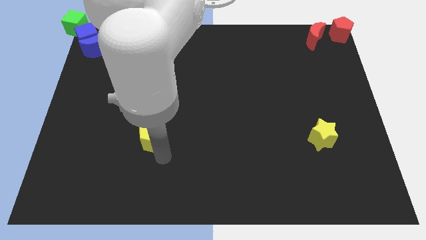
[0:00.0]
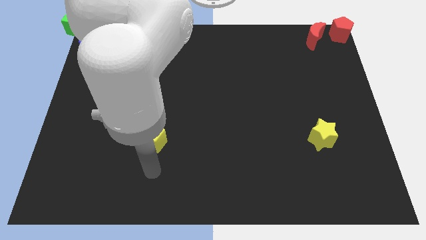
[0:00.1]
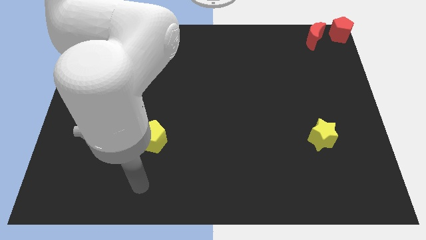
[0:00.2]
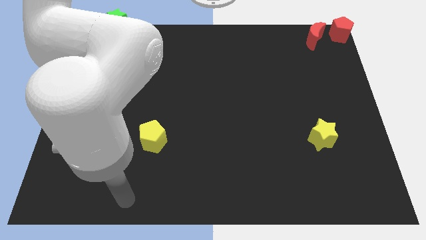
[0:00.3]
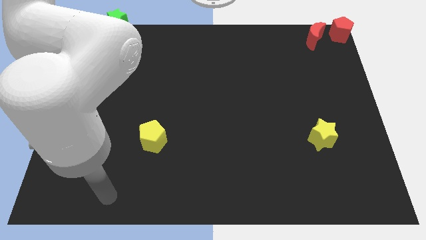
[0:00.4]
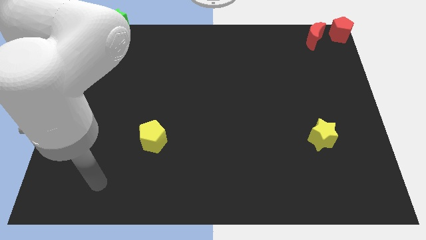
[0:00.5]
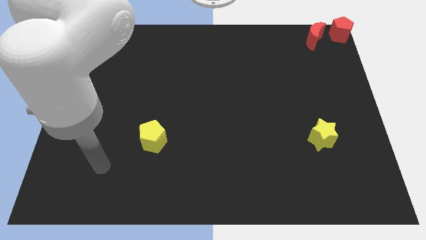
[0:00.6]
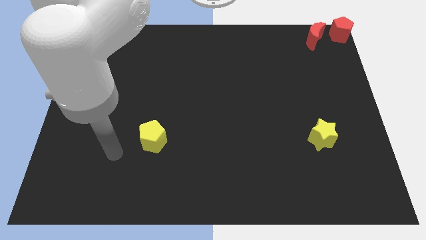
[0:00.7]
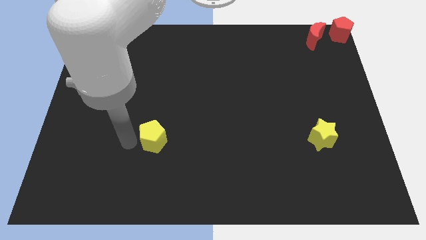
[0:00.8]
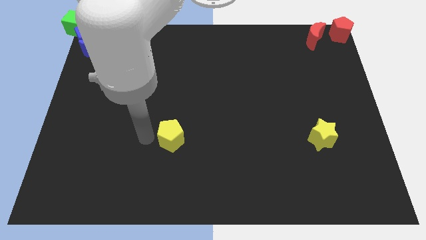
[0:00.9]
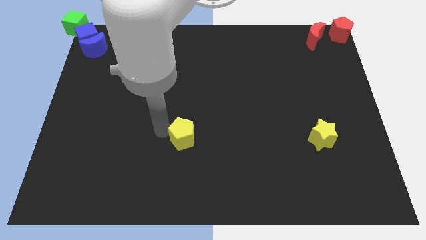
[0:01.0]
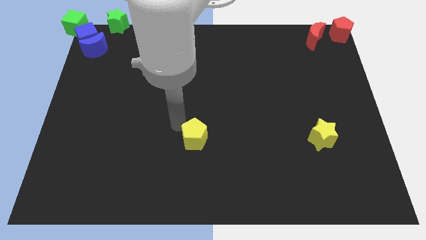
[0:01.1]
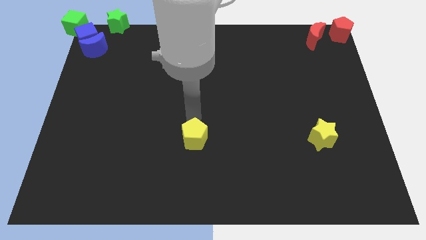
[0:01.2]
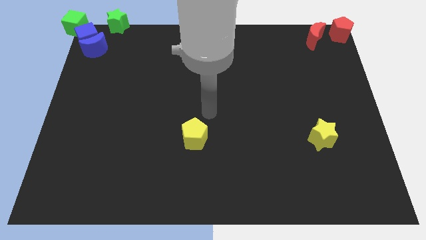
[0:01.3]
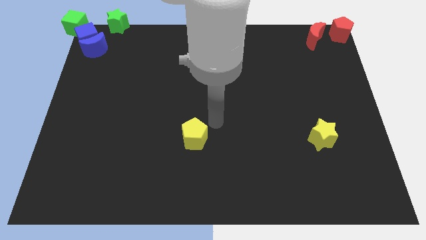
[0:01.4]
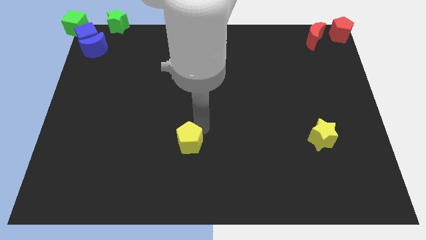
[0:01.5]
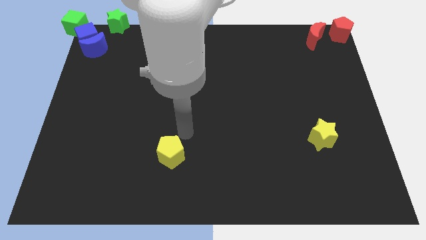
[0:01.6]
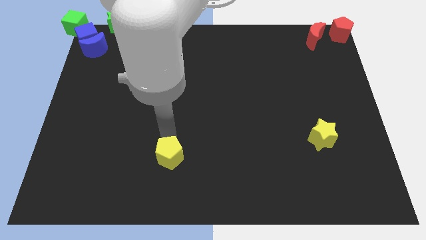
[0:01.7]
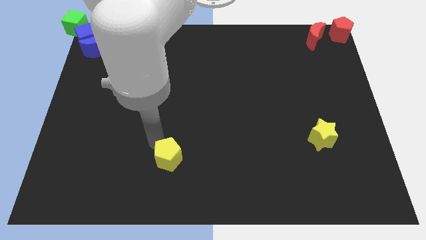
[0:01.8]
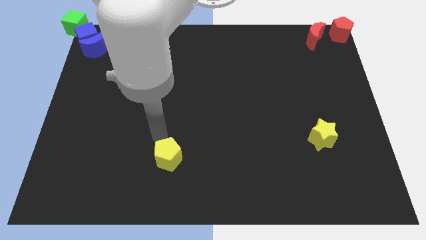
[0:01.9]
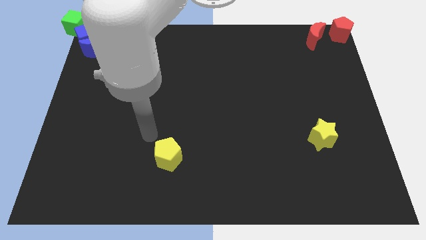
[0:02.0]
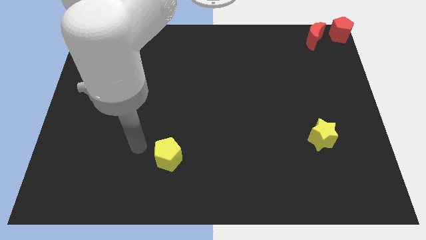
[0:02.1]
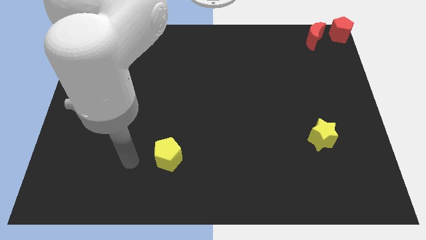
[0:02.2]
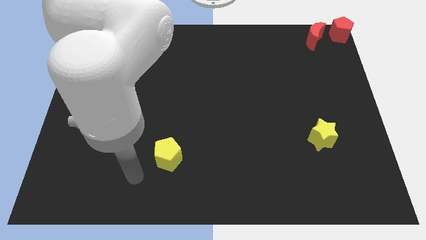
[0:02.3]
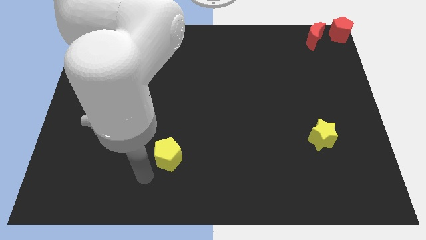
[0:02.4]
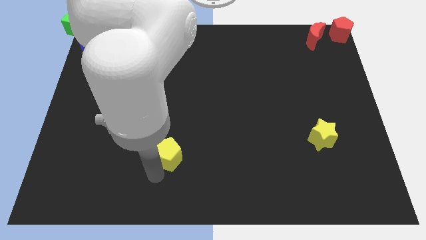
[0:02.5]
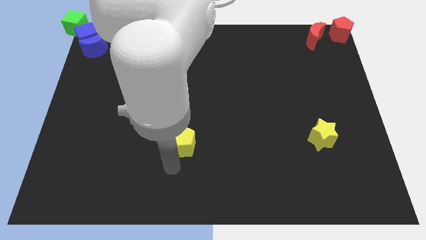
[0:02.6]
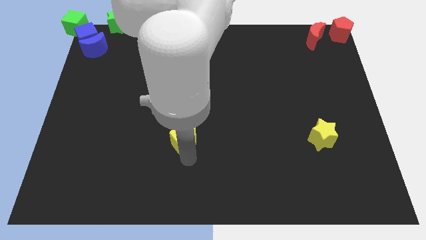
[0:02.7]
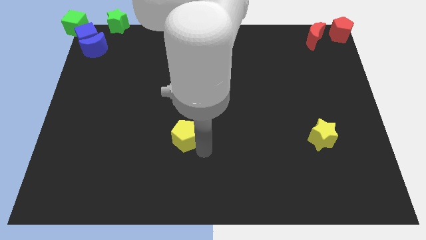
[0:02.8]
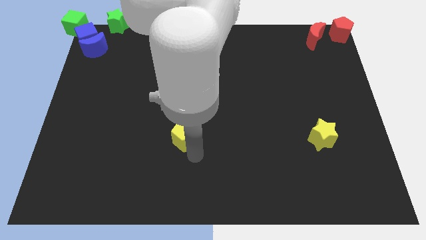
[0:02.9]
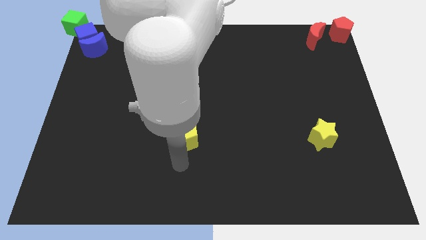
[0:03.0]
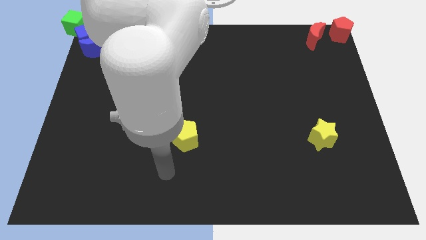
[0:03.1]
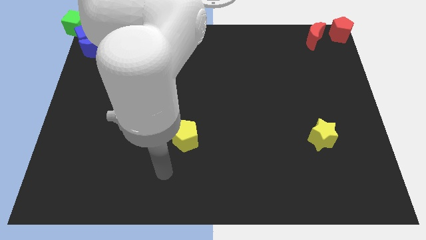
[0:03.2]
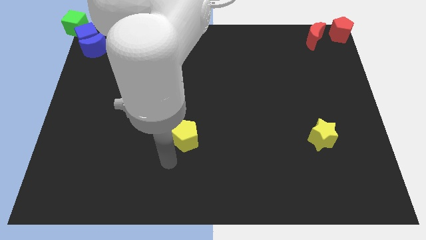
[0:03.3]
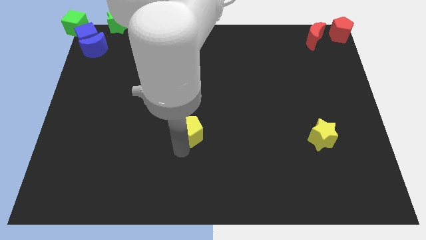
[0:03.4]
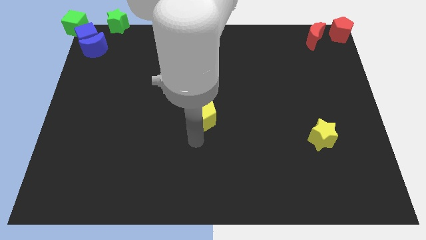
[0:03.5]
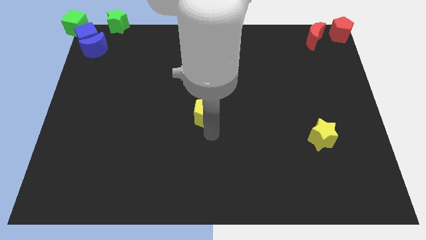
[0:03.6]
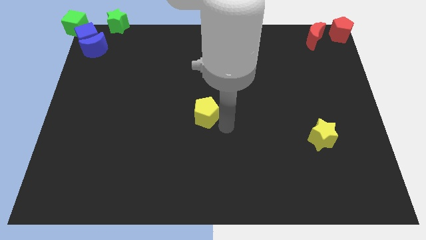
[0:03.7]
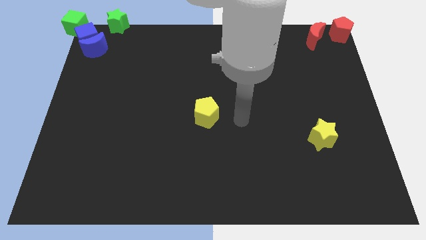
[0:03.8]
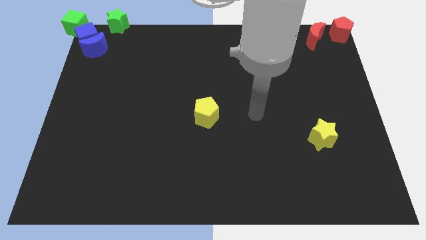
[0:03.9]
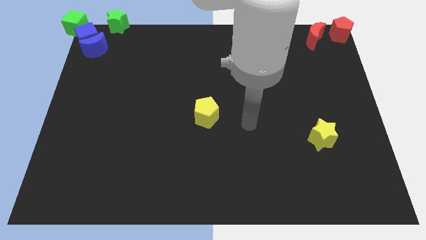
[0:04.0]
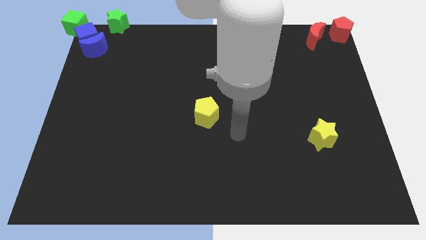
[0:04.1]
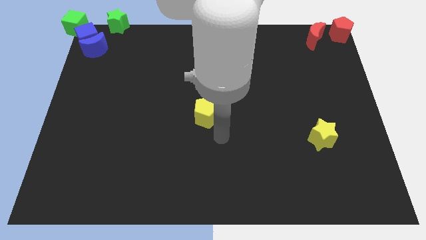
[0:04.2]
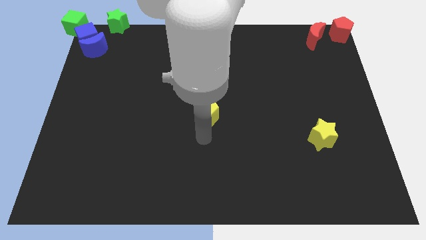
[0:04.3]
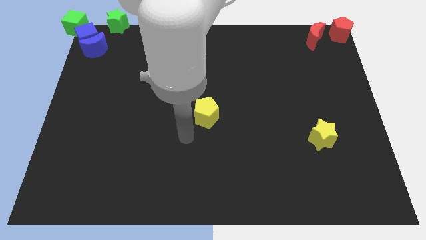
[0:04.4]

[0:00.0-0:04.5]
push the yellow pentagon towards the center of the board

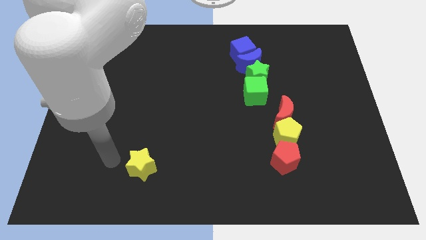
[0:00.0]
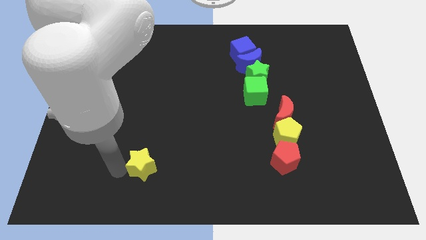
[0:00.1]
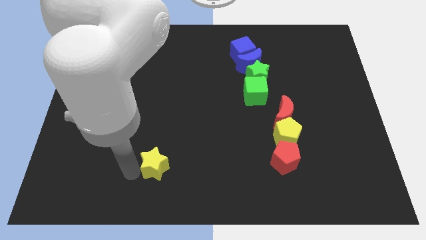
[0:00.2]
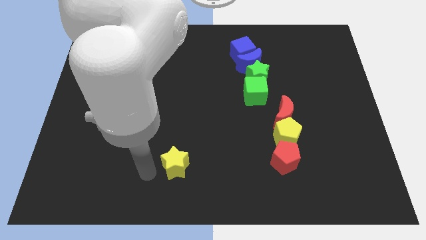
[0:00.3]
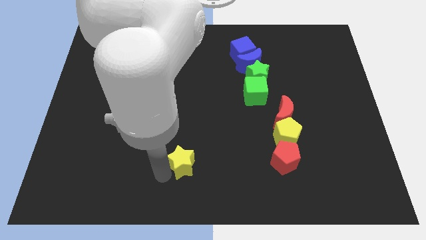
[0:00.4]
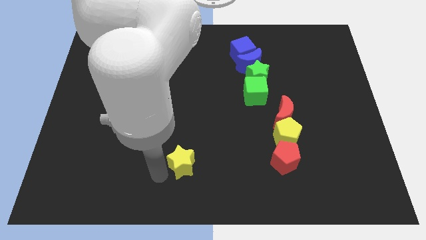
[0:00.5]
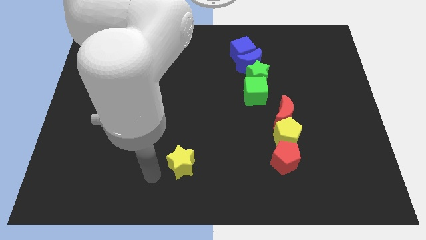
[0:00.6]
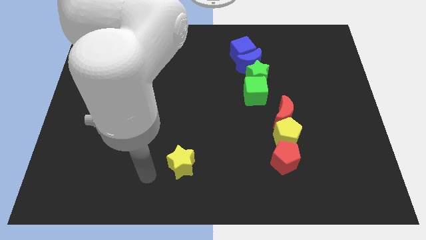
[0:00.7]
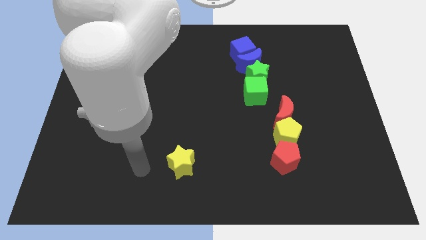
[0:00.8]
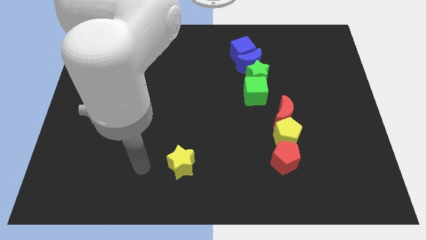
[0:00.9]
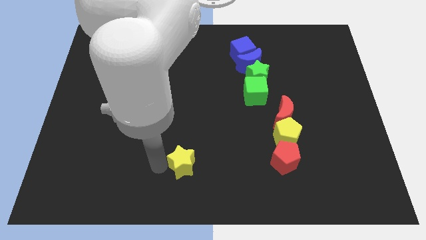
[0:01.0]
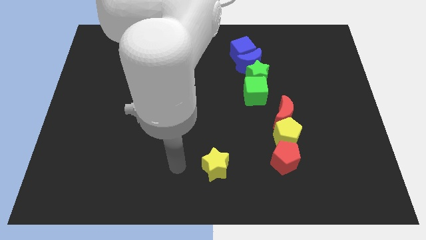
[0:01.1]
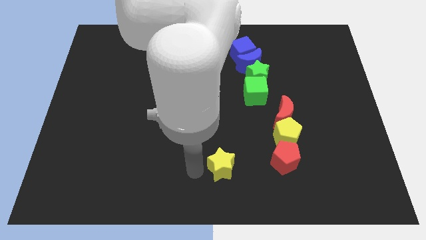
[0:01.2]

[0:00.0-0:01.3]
place the yellow star towards the red pentagon

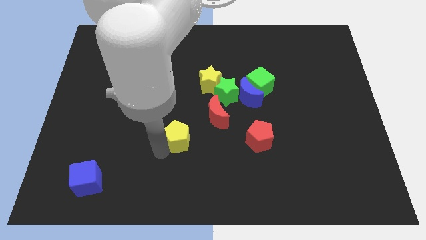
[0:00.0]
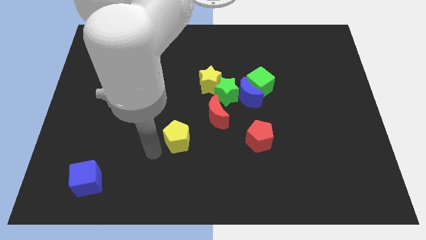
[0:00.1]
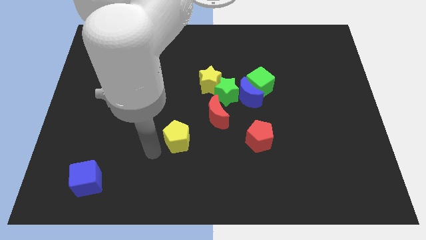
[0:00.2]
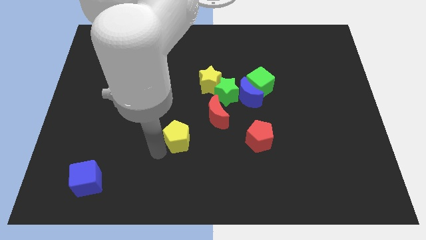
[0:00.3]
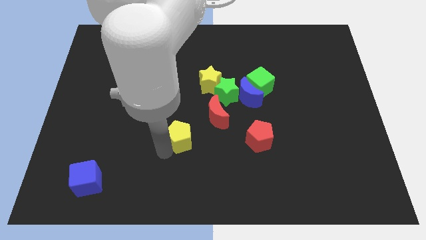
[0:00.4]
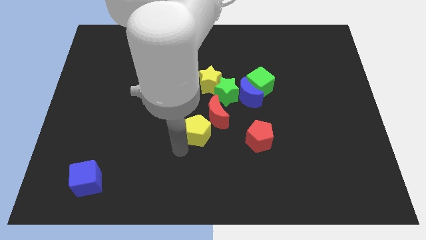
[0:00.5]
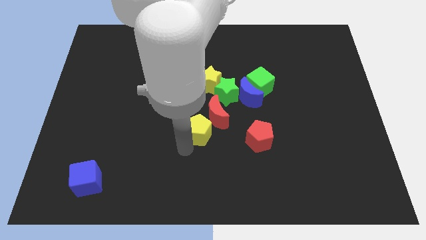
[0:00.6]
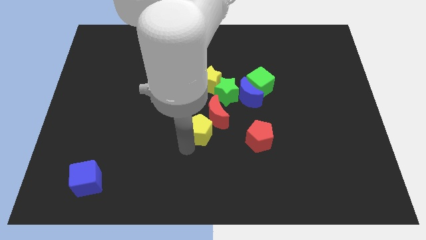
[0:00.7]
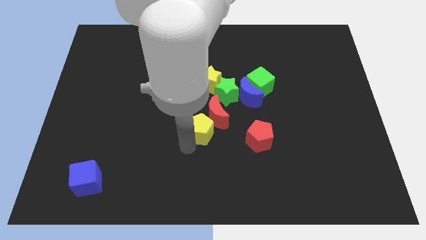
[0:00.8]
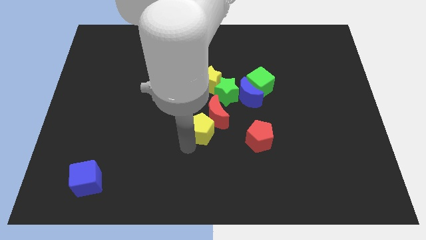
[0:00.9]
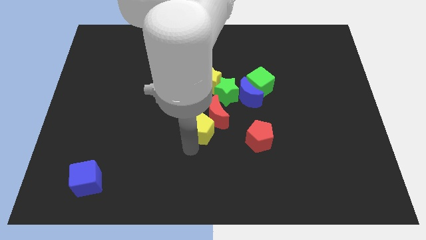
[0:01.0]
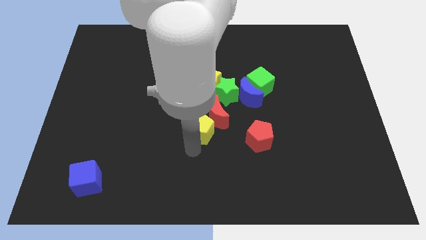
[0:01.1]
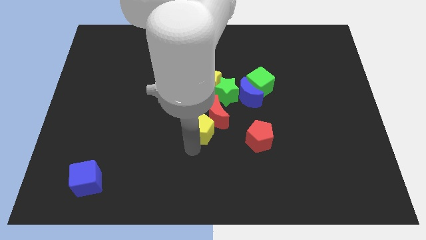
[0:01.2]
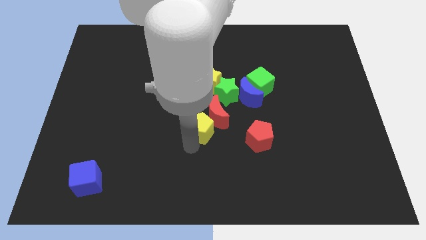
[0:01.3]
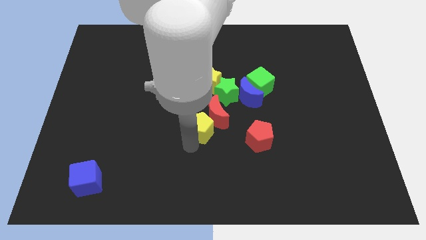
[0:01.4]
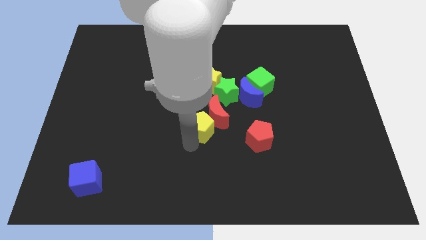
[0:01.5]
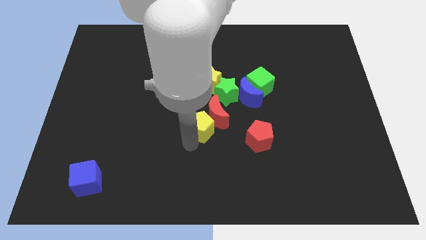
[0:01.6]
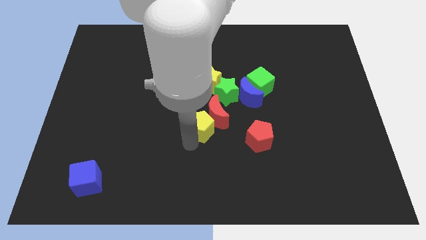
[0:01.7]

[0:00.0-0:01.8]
move the yellow pentagon near to the left side of the red crescent

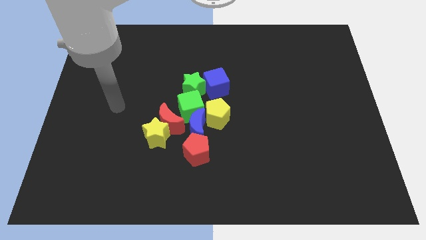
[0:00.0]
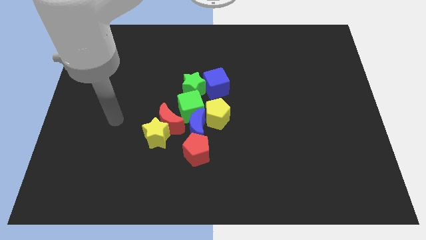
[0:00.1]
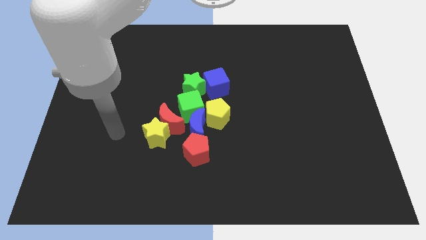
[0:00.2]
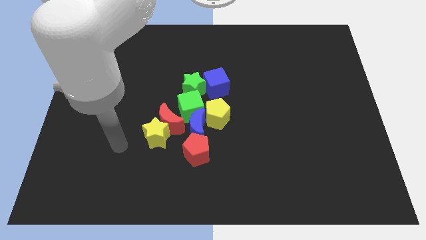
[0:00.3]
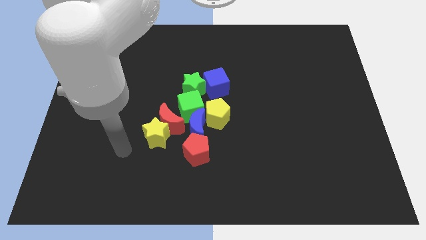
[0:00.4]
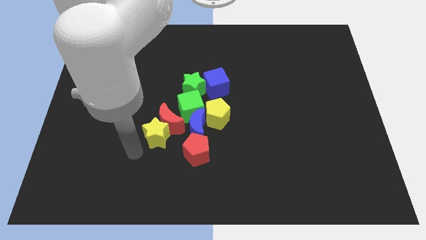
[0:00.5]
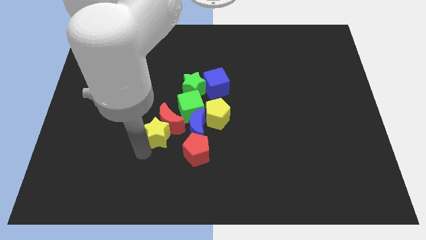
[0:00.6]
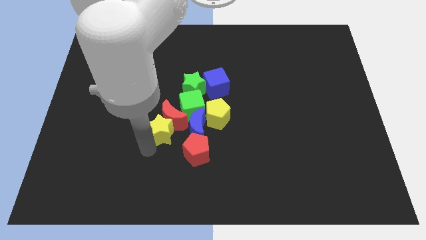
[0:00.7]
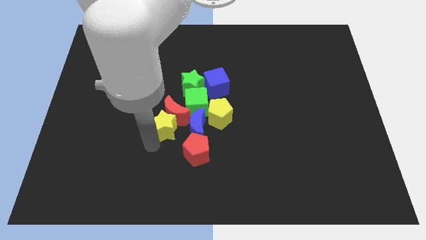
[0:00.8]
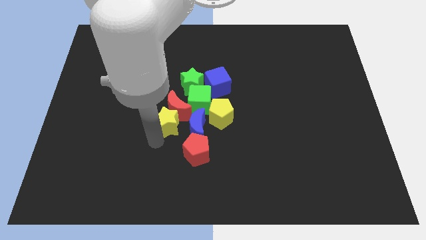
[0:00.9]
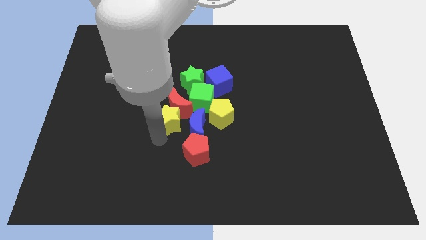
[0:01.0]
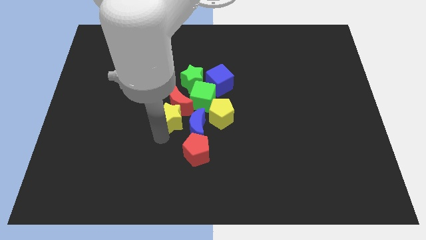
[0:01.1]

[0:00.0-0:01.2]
push the yellow star and red crescent into the green cube

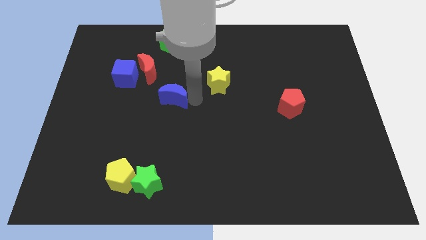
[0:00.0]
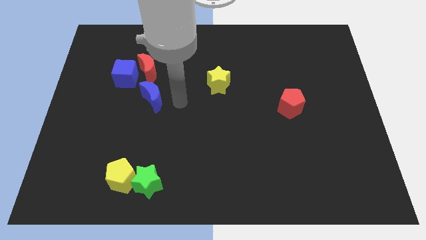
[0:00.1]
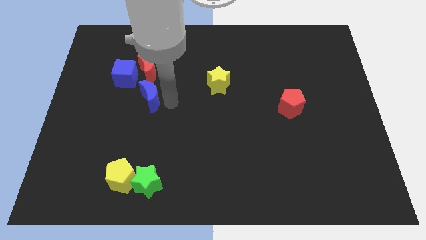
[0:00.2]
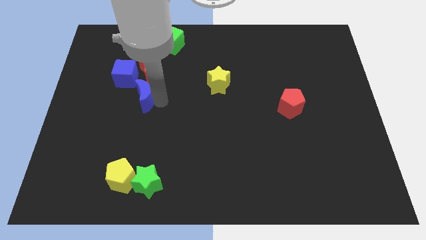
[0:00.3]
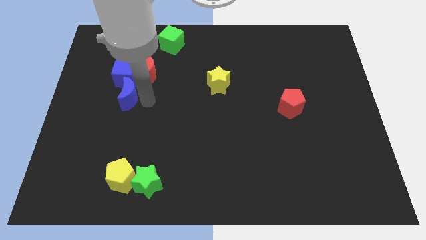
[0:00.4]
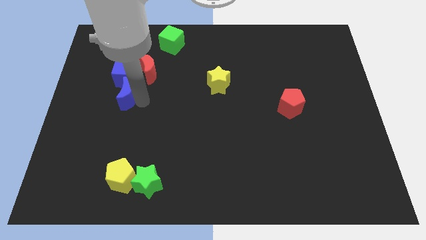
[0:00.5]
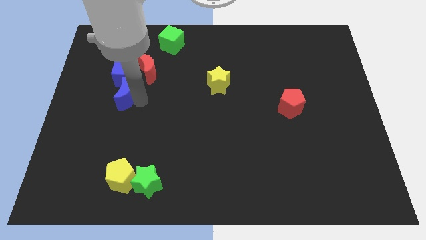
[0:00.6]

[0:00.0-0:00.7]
place the blue moon below the blue cube
